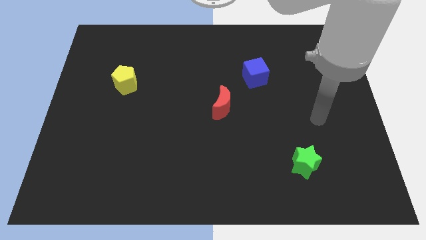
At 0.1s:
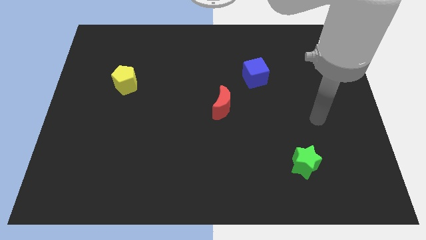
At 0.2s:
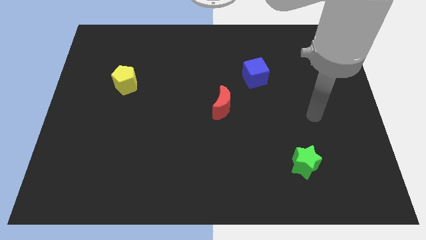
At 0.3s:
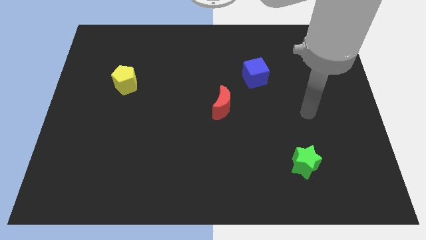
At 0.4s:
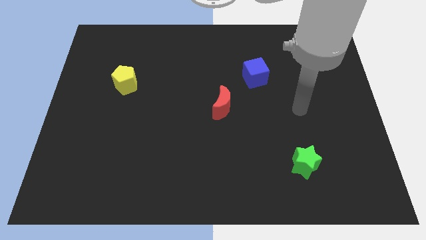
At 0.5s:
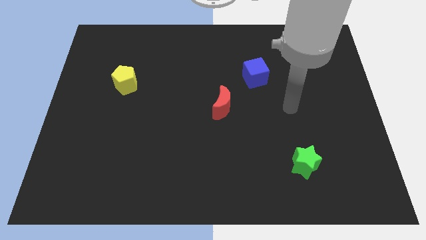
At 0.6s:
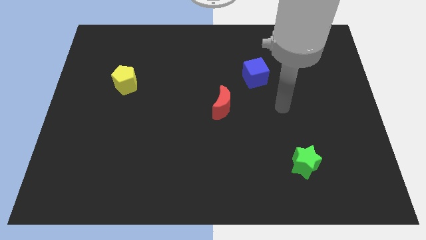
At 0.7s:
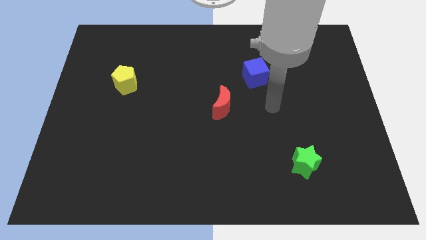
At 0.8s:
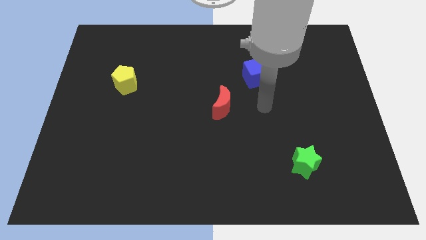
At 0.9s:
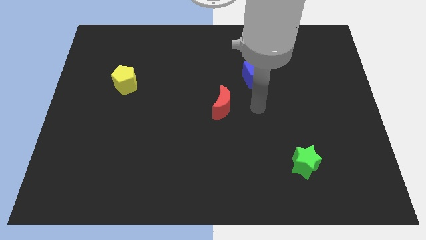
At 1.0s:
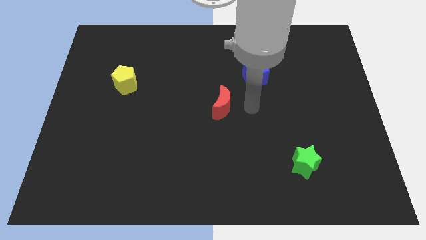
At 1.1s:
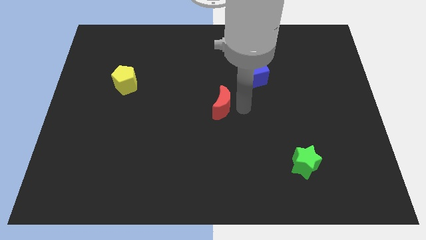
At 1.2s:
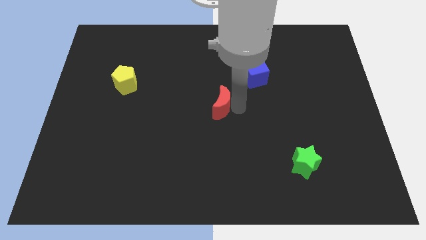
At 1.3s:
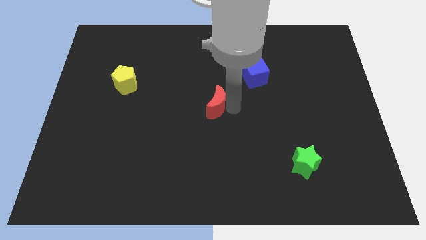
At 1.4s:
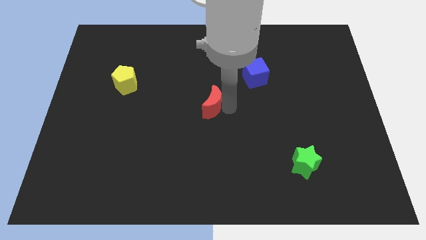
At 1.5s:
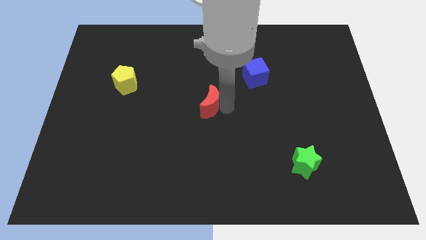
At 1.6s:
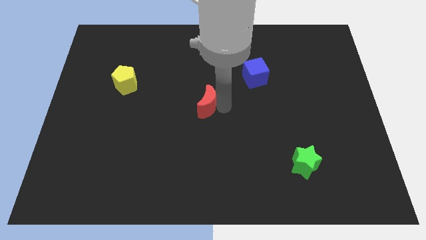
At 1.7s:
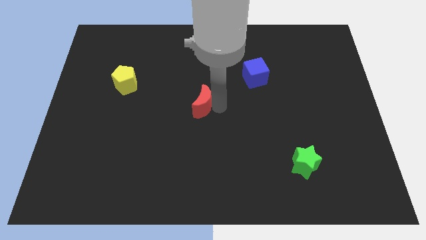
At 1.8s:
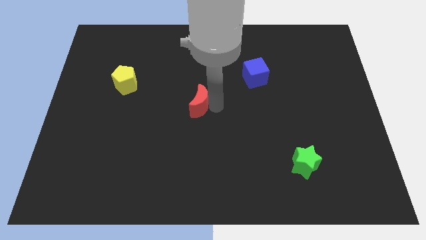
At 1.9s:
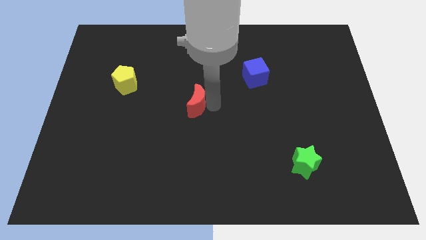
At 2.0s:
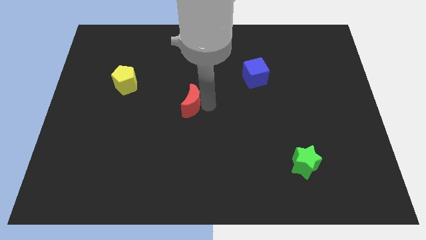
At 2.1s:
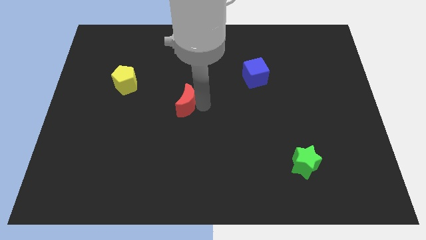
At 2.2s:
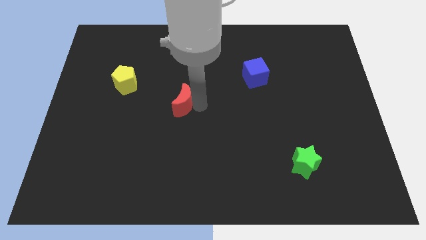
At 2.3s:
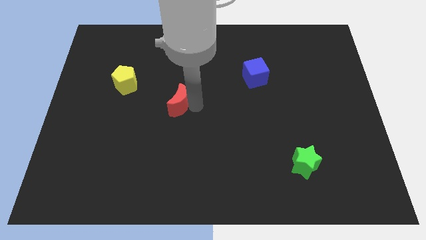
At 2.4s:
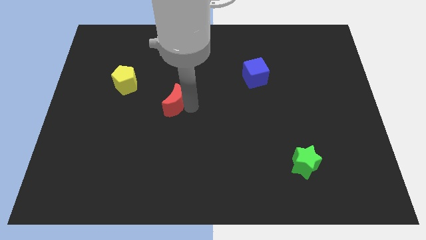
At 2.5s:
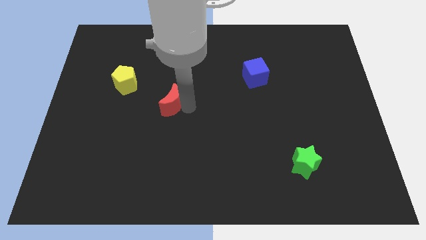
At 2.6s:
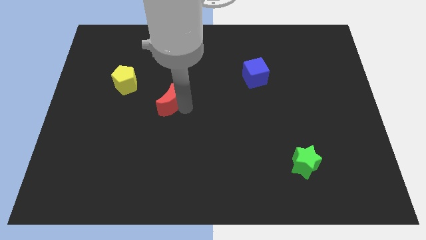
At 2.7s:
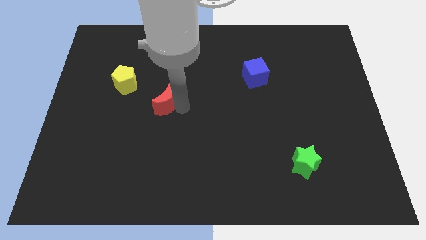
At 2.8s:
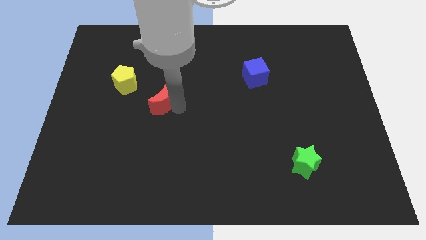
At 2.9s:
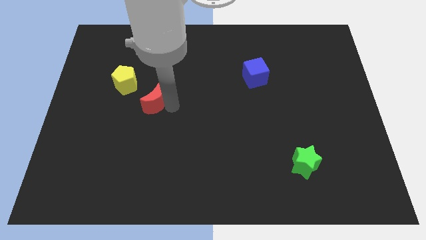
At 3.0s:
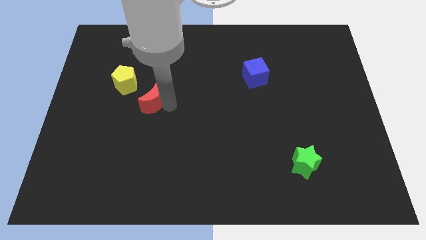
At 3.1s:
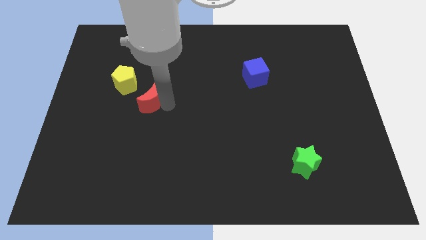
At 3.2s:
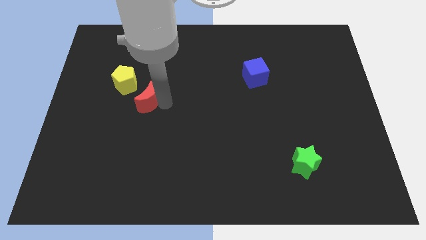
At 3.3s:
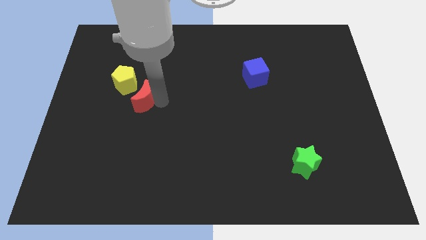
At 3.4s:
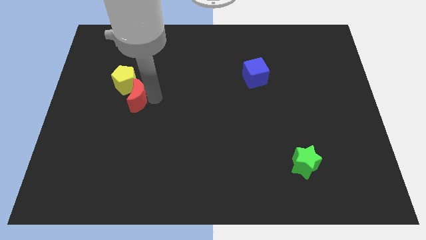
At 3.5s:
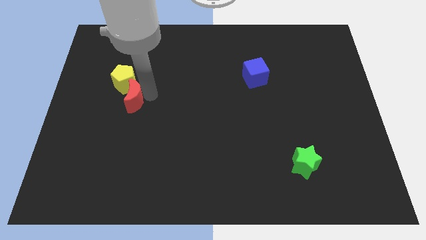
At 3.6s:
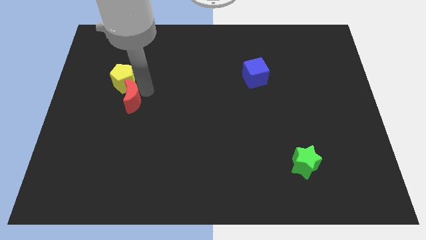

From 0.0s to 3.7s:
move the red moon to the yellow pentagon

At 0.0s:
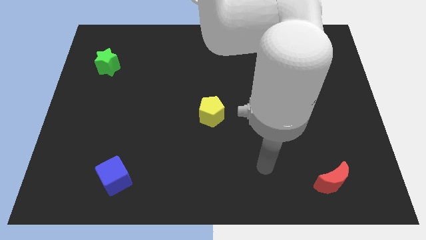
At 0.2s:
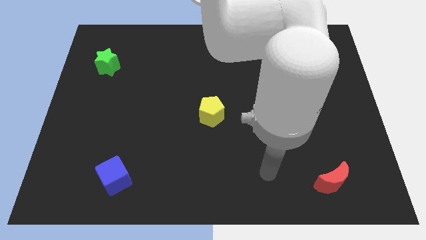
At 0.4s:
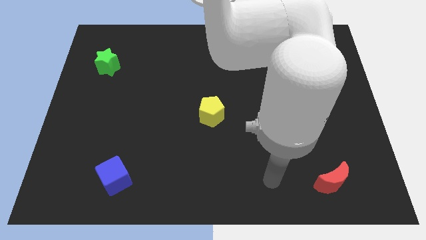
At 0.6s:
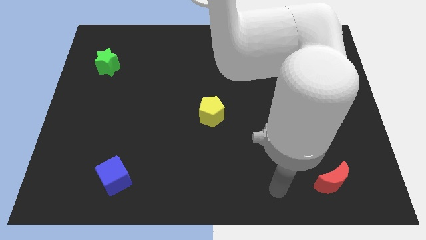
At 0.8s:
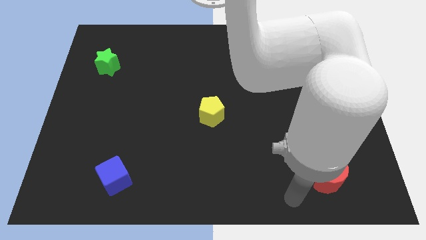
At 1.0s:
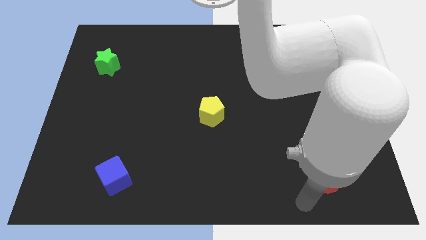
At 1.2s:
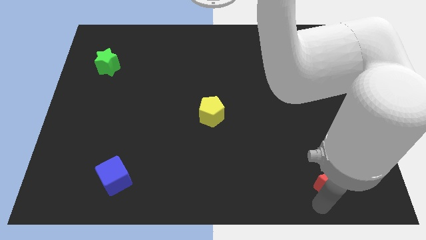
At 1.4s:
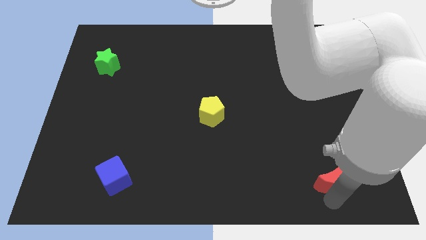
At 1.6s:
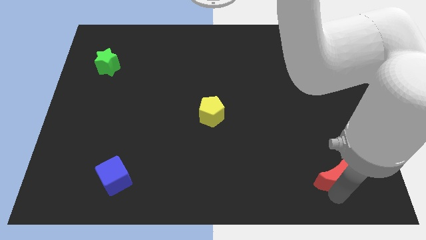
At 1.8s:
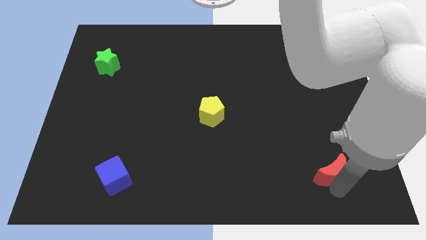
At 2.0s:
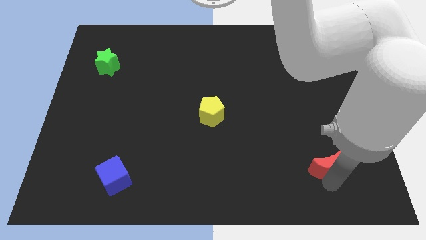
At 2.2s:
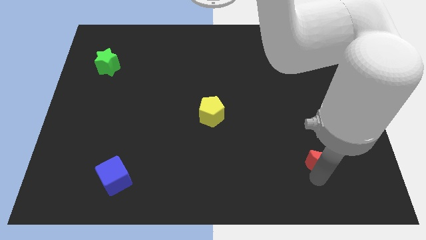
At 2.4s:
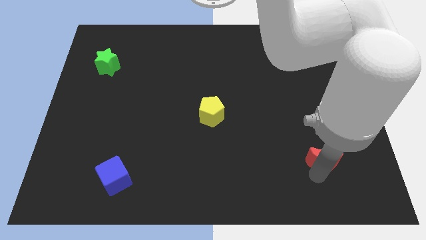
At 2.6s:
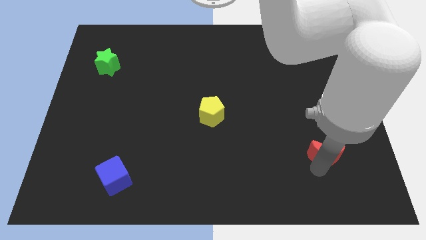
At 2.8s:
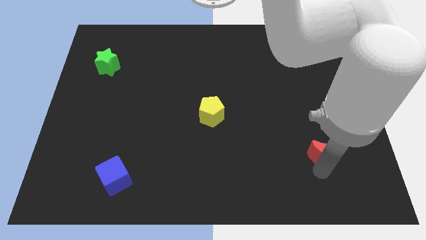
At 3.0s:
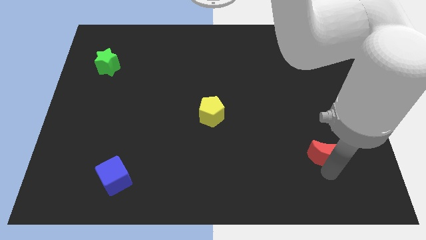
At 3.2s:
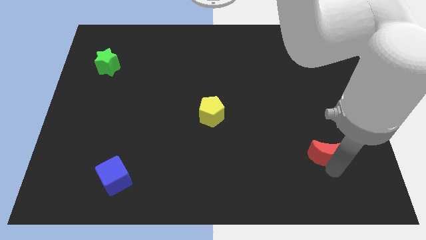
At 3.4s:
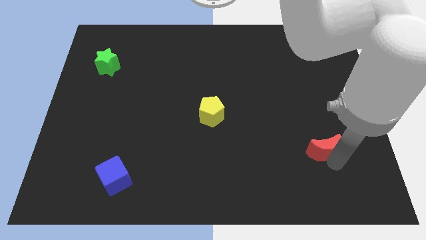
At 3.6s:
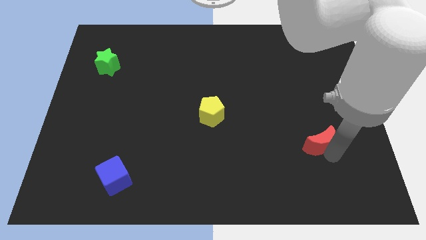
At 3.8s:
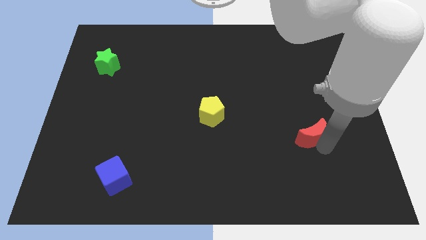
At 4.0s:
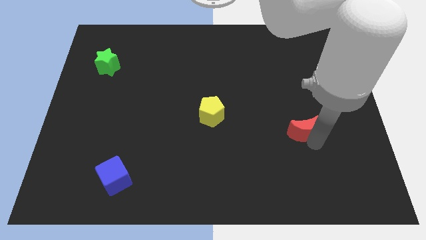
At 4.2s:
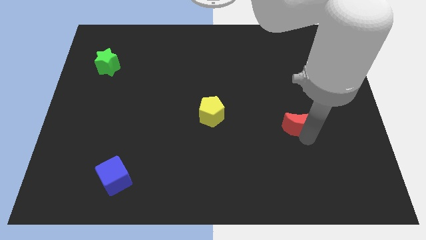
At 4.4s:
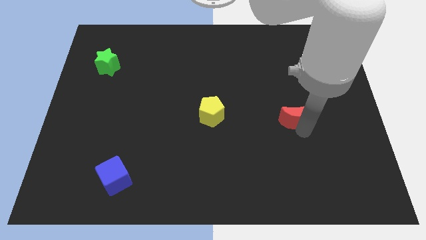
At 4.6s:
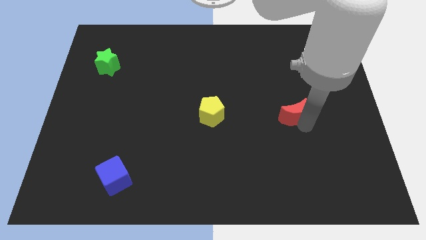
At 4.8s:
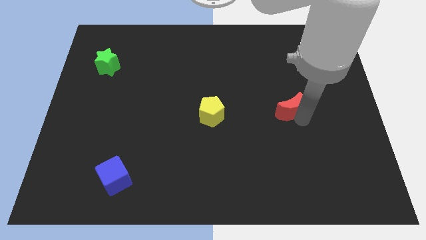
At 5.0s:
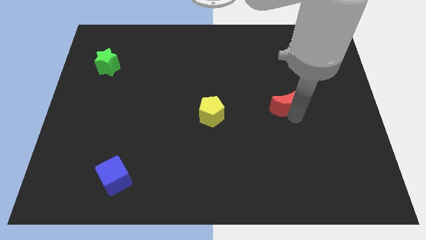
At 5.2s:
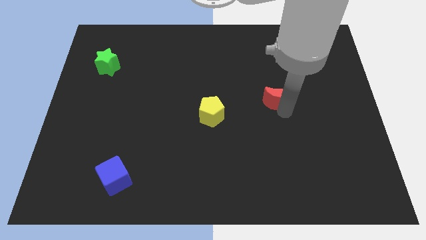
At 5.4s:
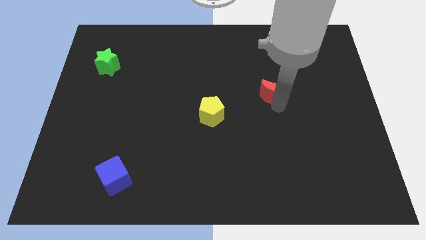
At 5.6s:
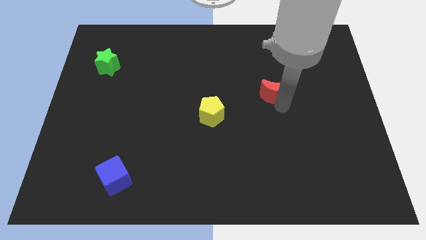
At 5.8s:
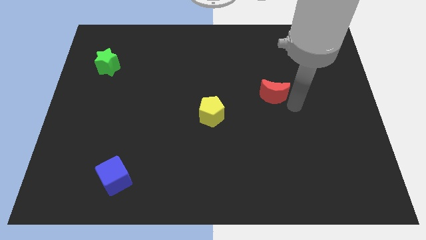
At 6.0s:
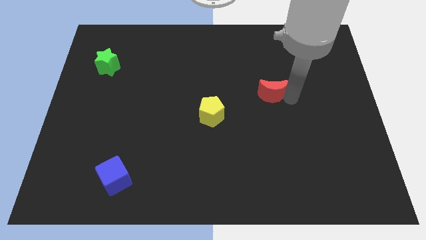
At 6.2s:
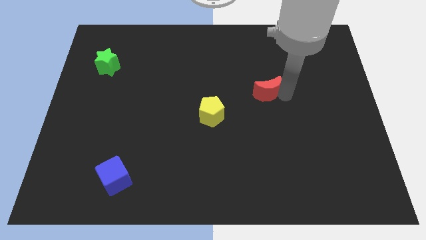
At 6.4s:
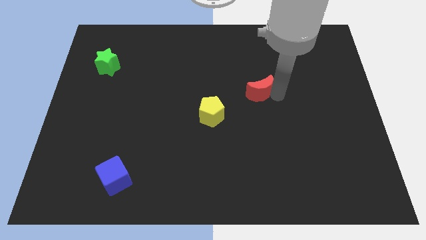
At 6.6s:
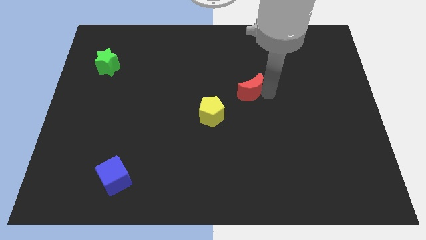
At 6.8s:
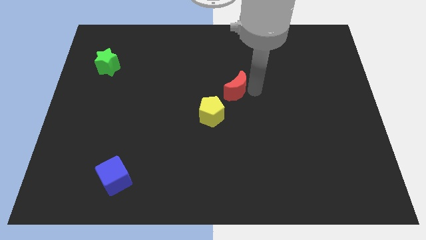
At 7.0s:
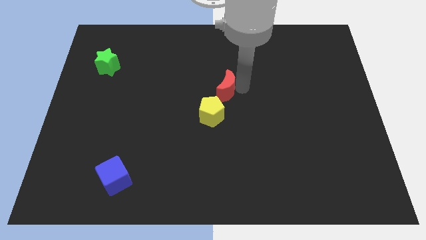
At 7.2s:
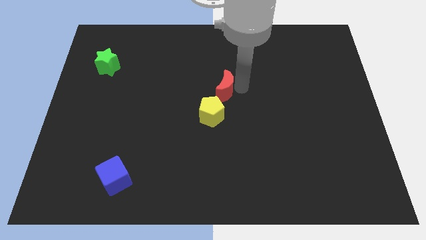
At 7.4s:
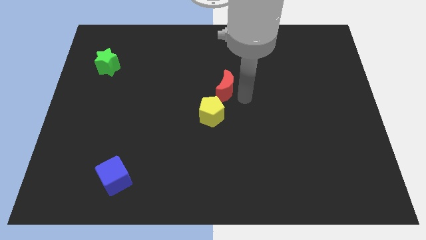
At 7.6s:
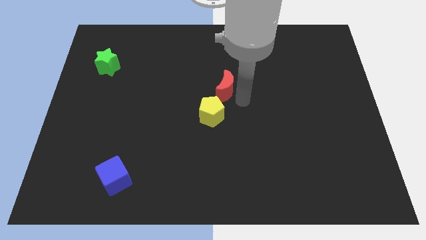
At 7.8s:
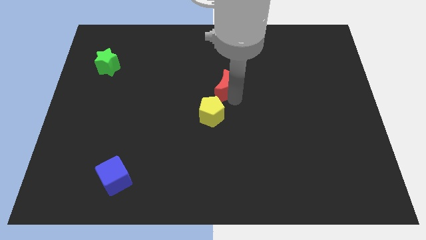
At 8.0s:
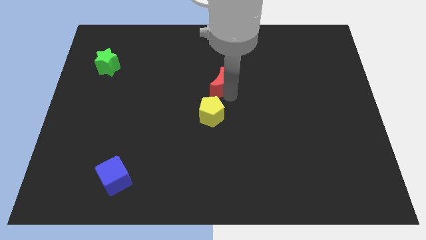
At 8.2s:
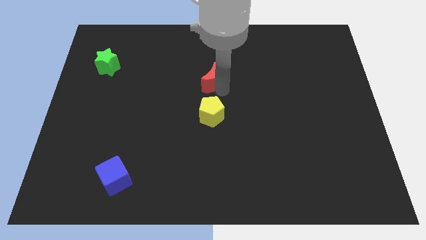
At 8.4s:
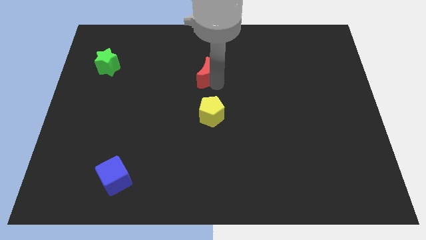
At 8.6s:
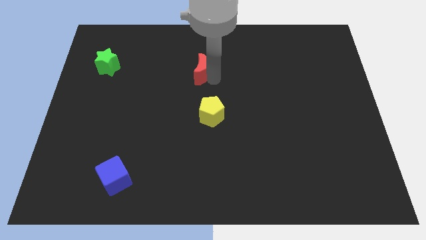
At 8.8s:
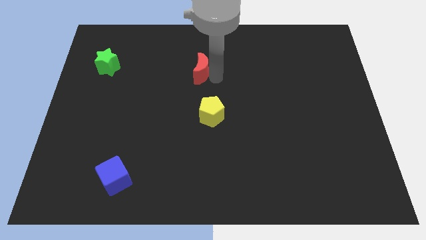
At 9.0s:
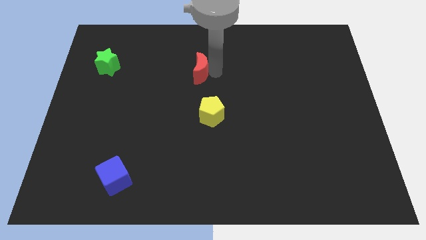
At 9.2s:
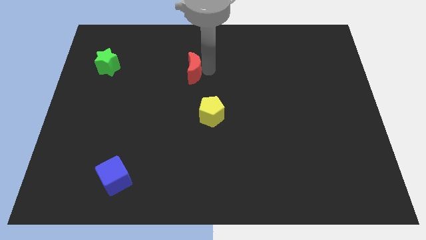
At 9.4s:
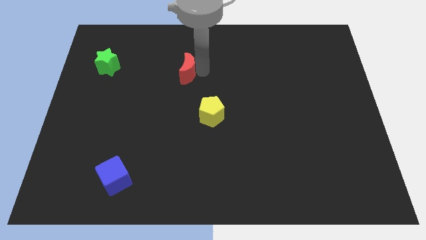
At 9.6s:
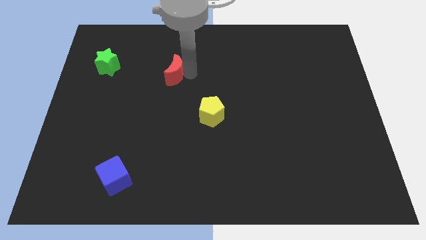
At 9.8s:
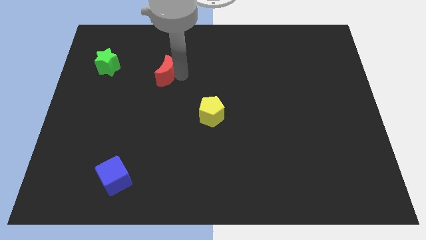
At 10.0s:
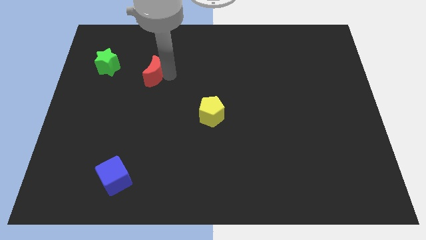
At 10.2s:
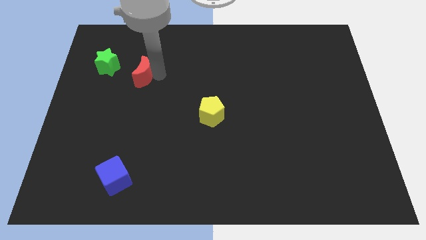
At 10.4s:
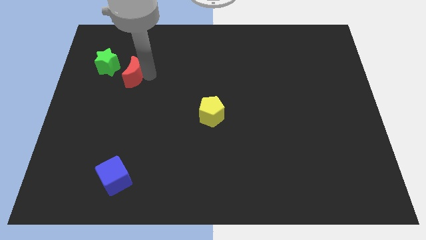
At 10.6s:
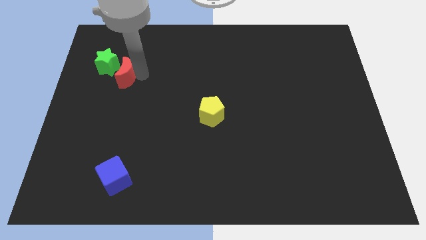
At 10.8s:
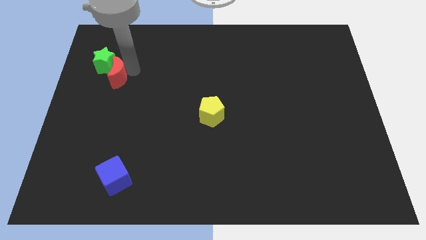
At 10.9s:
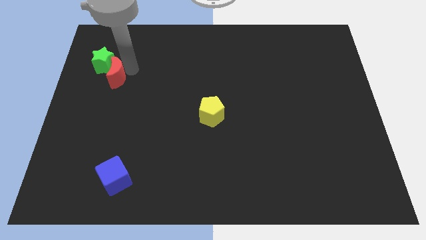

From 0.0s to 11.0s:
move the red moon next to the star
